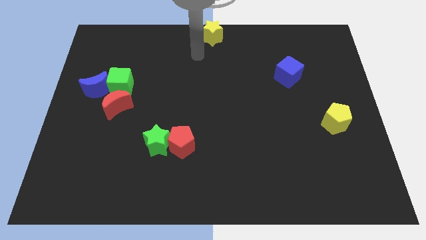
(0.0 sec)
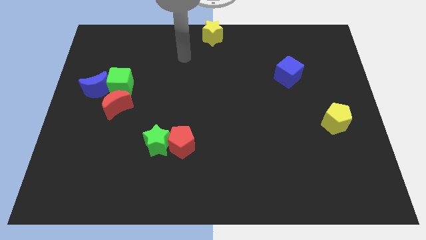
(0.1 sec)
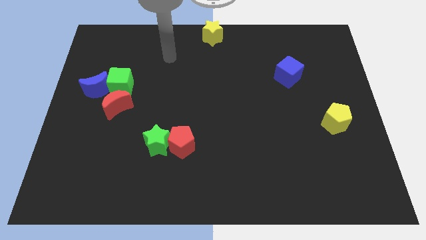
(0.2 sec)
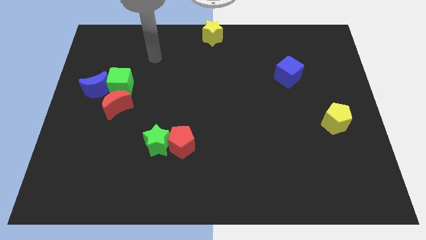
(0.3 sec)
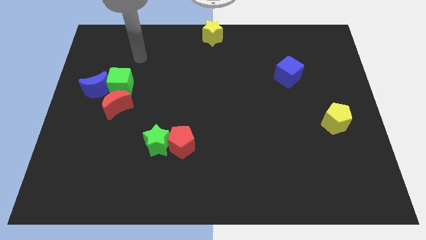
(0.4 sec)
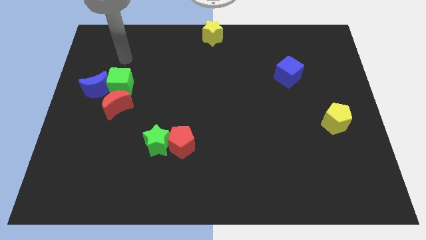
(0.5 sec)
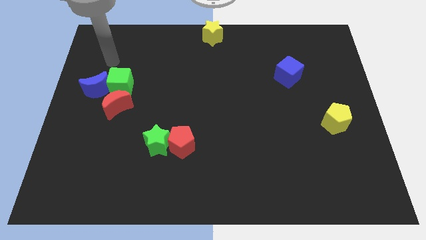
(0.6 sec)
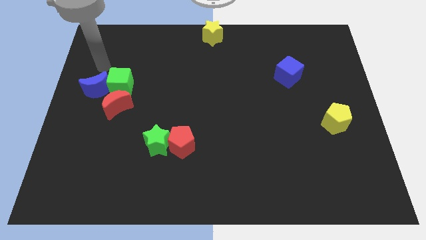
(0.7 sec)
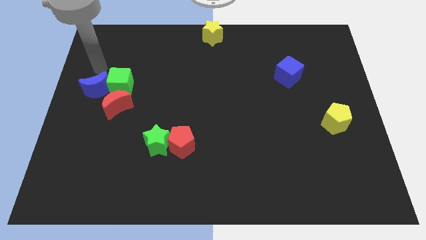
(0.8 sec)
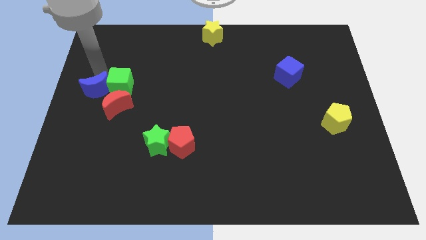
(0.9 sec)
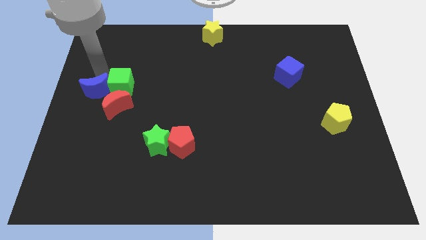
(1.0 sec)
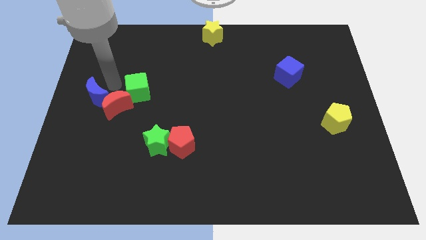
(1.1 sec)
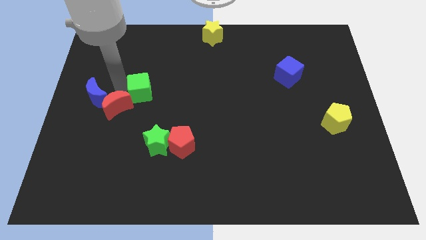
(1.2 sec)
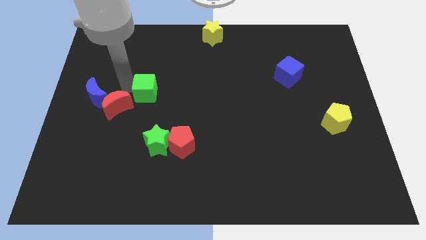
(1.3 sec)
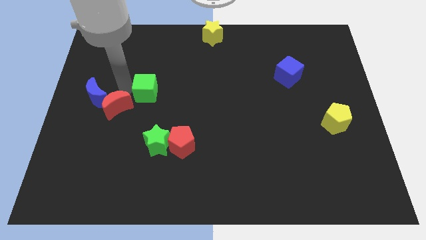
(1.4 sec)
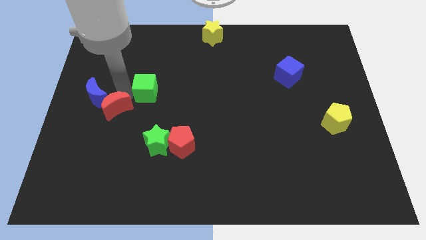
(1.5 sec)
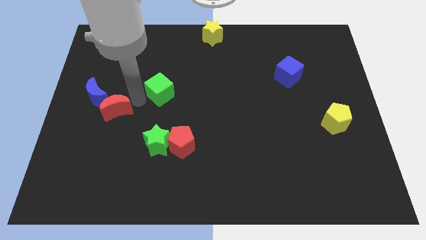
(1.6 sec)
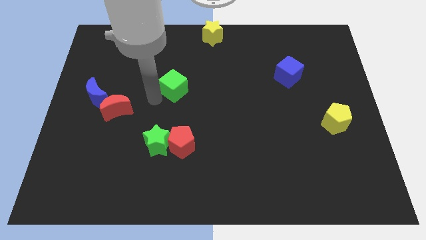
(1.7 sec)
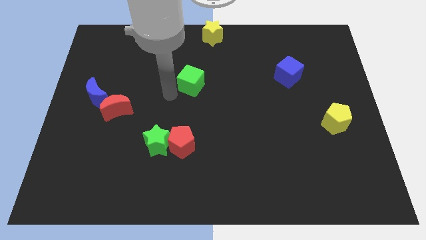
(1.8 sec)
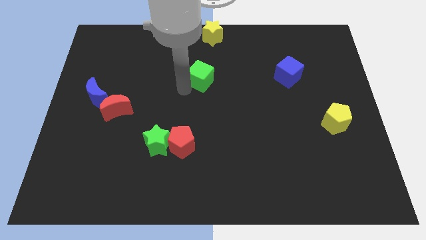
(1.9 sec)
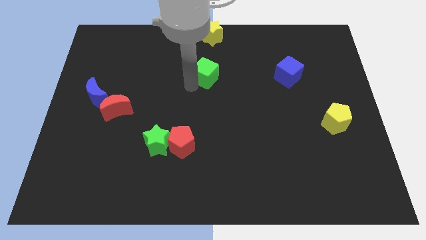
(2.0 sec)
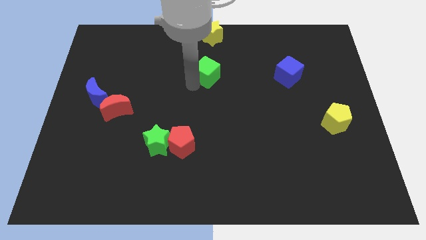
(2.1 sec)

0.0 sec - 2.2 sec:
separate green cube from red crescent

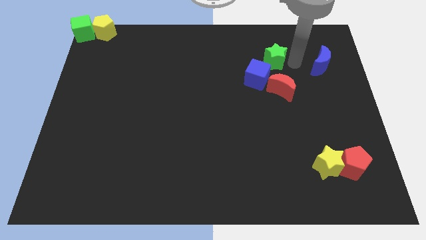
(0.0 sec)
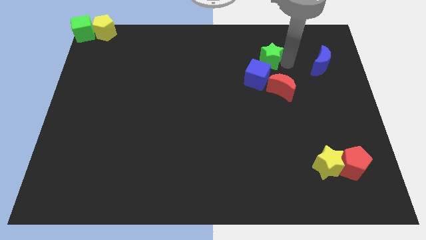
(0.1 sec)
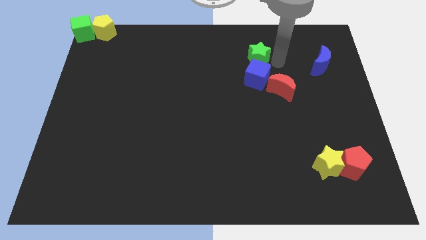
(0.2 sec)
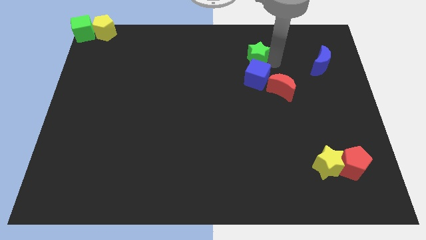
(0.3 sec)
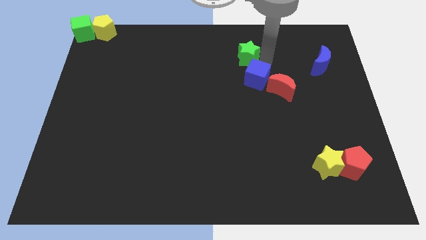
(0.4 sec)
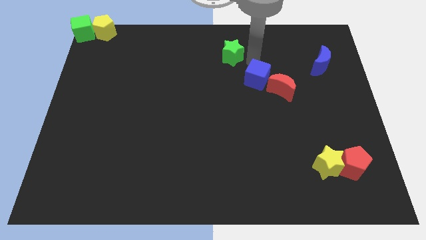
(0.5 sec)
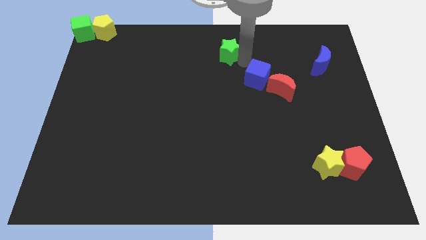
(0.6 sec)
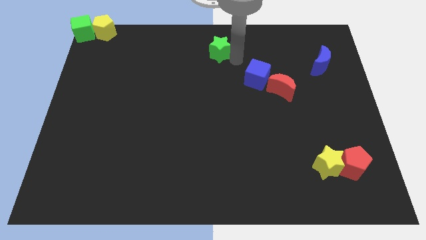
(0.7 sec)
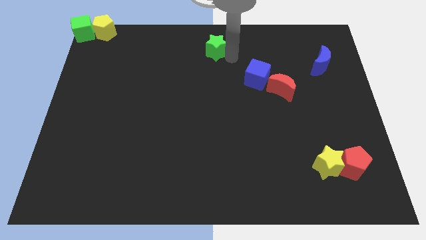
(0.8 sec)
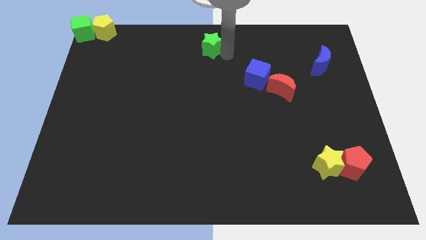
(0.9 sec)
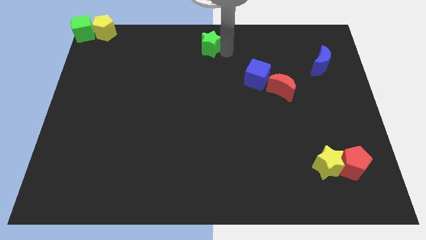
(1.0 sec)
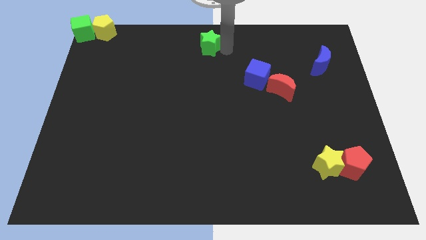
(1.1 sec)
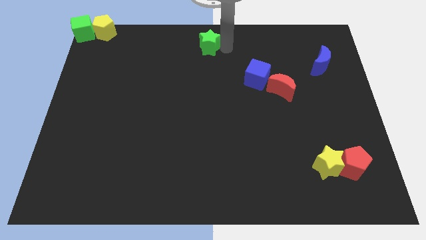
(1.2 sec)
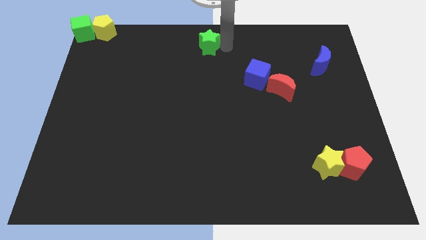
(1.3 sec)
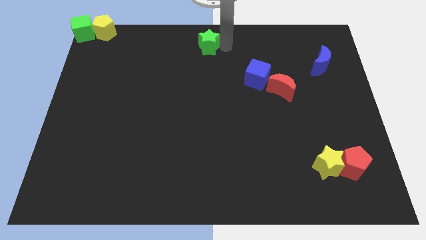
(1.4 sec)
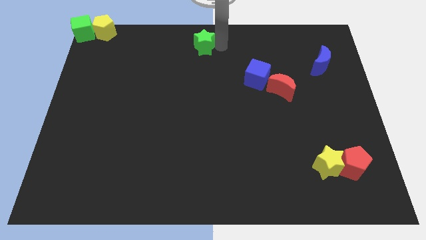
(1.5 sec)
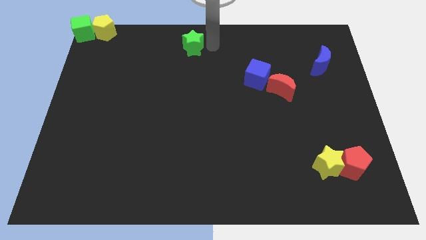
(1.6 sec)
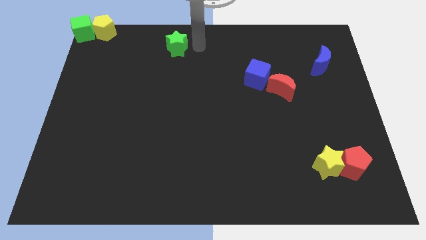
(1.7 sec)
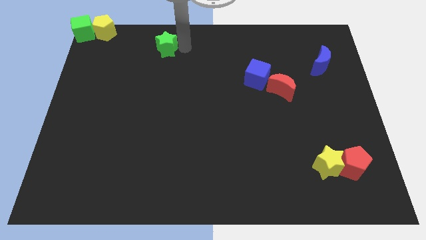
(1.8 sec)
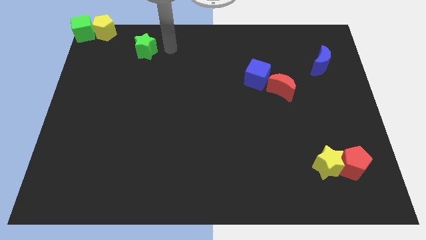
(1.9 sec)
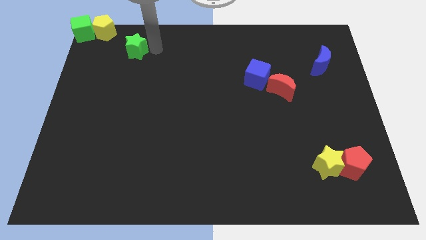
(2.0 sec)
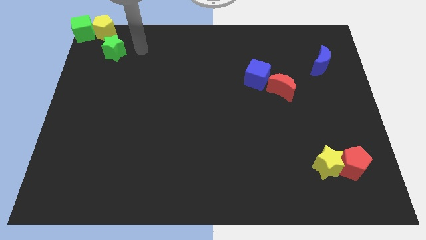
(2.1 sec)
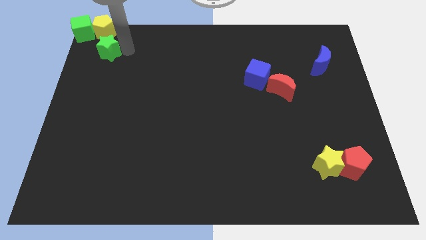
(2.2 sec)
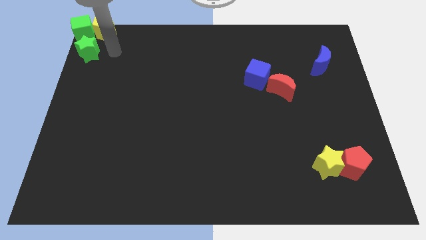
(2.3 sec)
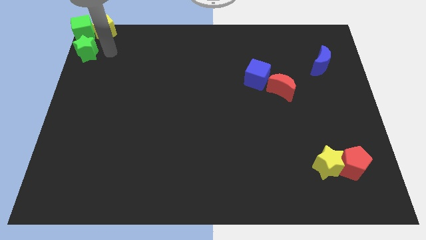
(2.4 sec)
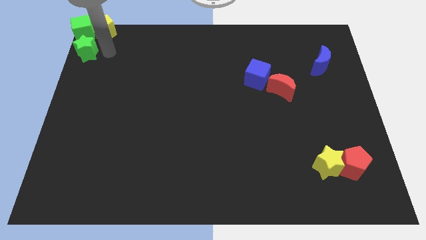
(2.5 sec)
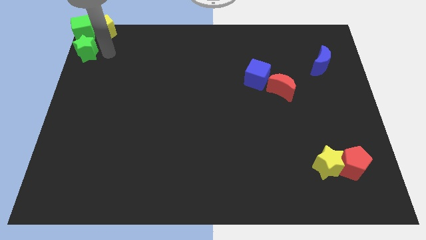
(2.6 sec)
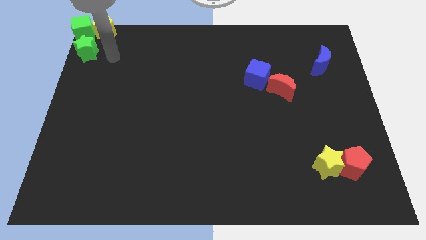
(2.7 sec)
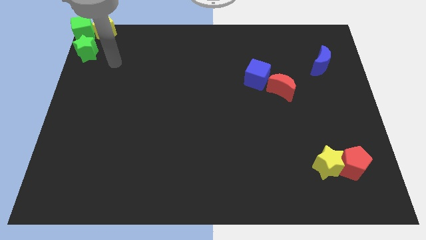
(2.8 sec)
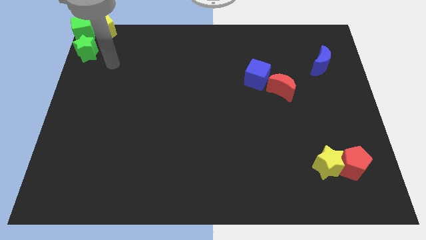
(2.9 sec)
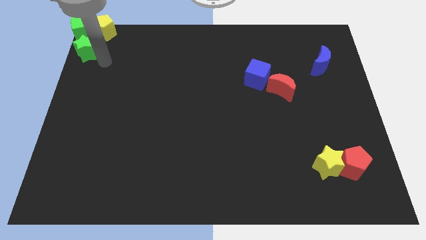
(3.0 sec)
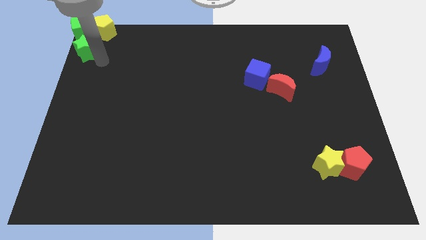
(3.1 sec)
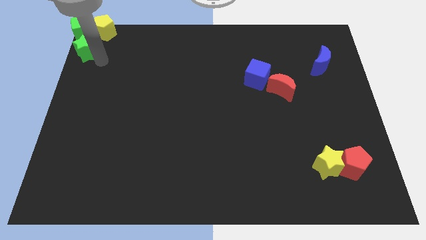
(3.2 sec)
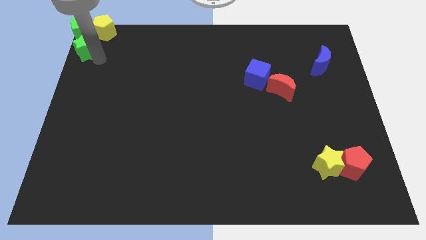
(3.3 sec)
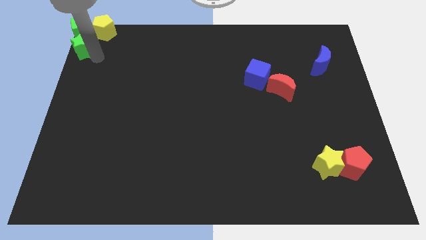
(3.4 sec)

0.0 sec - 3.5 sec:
move green star below the green cube

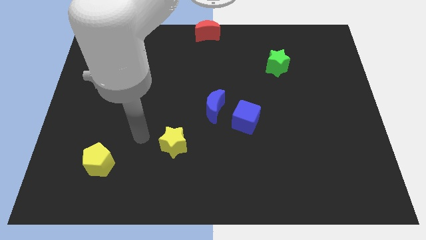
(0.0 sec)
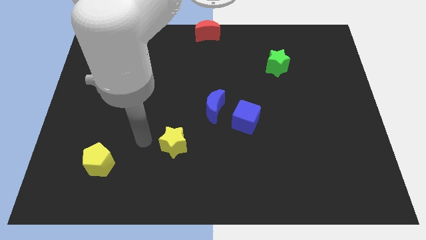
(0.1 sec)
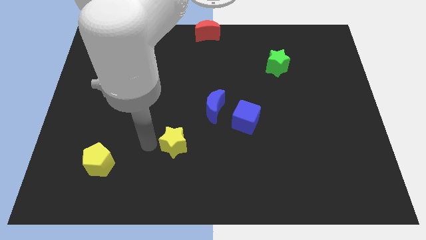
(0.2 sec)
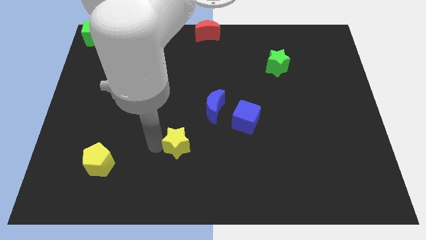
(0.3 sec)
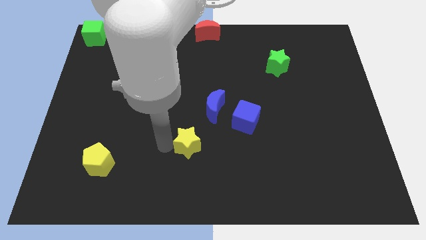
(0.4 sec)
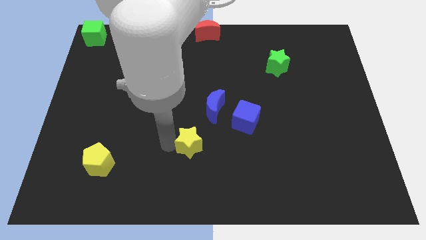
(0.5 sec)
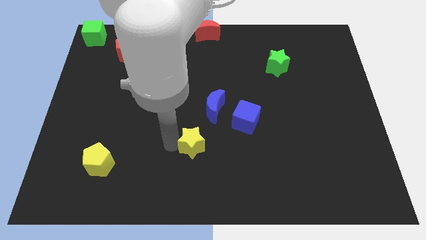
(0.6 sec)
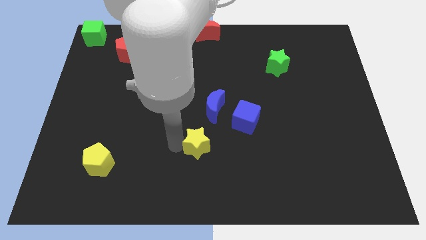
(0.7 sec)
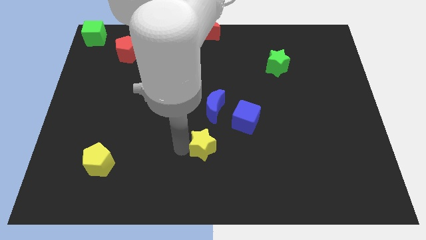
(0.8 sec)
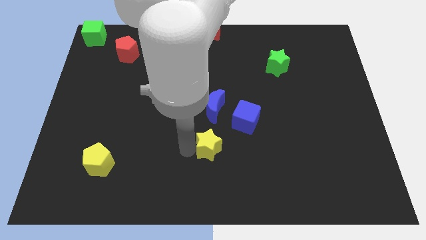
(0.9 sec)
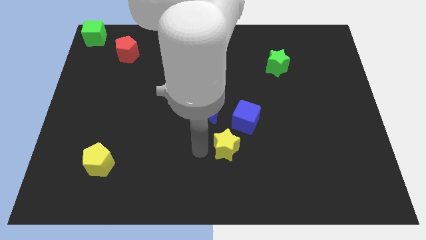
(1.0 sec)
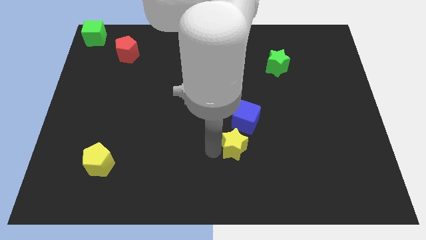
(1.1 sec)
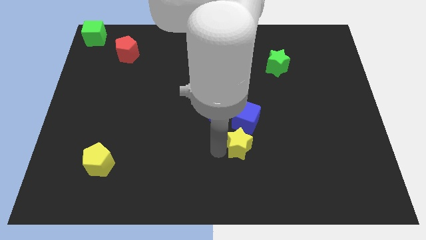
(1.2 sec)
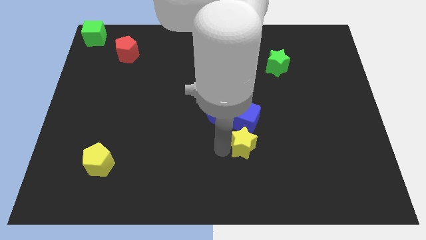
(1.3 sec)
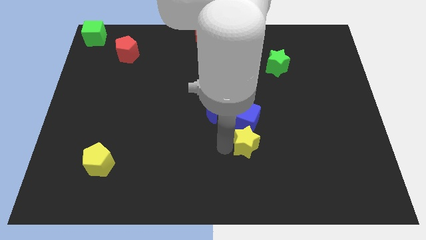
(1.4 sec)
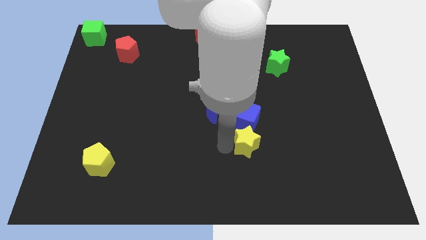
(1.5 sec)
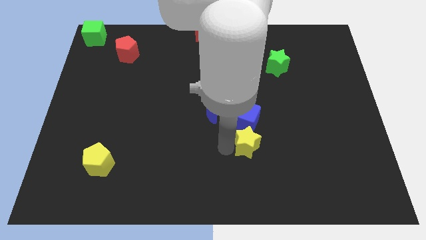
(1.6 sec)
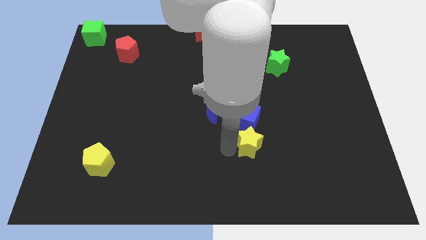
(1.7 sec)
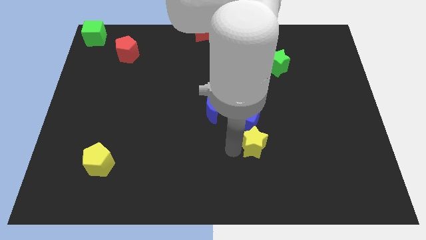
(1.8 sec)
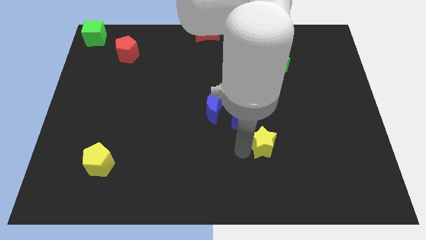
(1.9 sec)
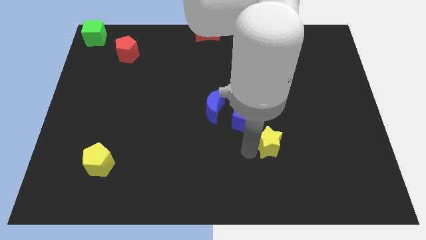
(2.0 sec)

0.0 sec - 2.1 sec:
move the yellow star to the bottom right side of the blue cube

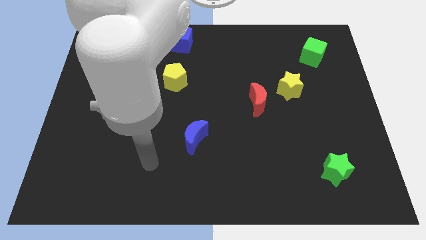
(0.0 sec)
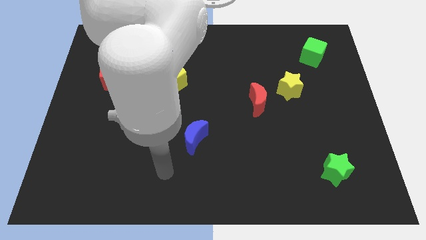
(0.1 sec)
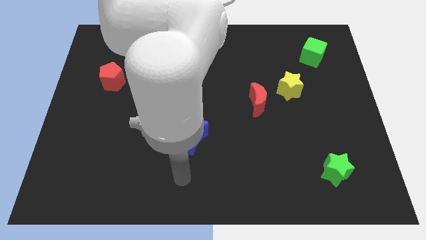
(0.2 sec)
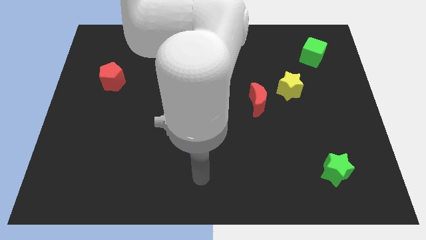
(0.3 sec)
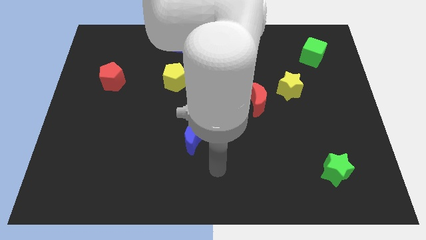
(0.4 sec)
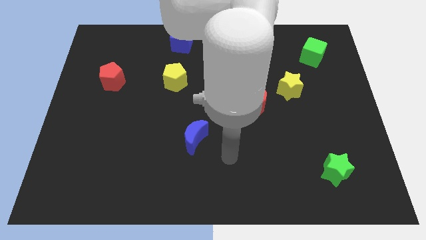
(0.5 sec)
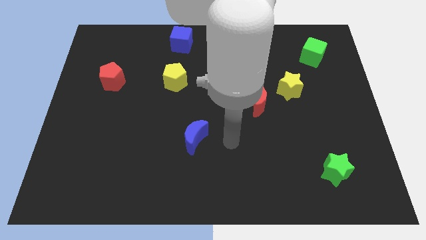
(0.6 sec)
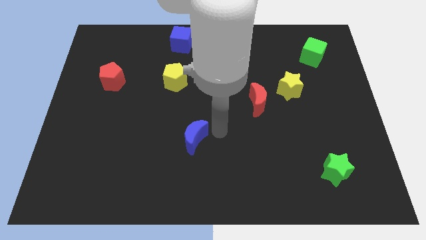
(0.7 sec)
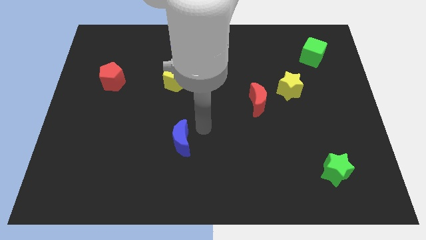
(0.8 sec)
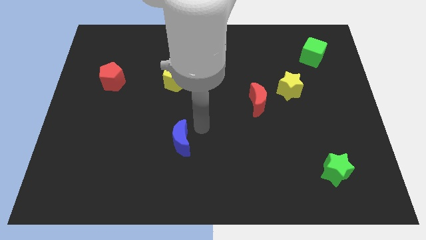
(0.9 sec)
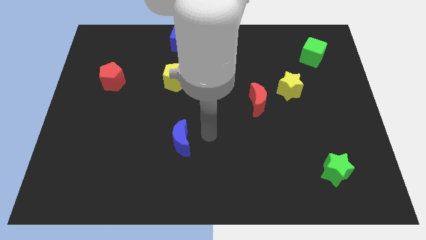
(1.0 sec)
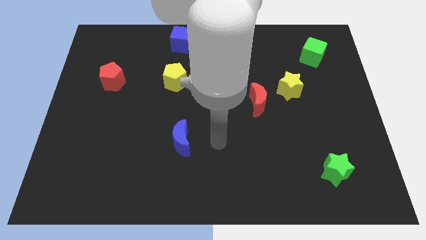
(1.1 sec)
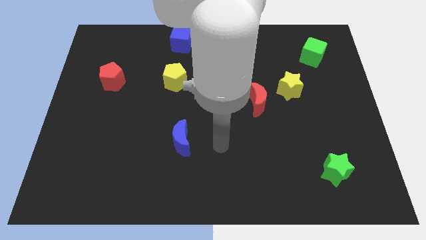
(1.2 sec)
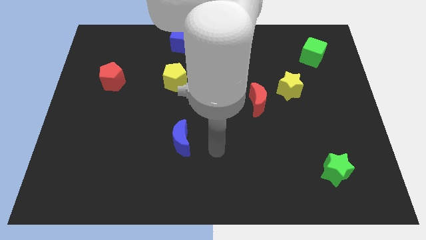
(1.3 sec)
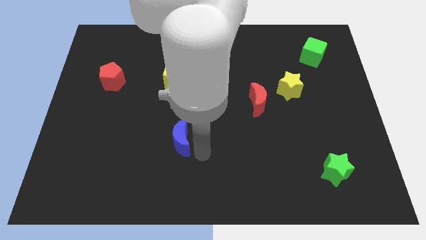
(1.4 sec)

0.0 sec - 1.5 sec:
place blue crescent down to the yellow pentagon in a line
